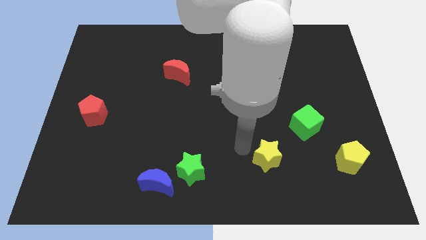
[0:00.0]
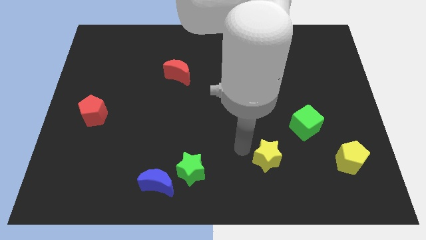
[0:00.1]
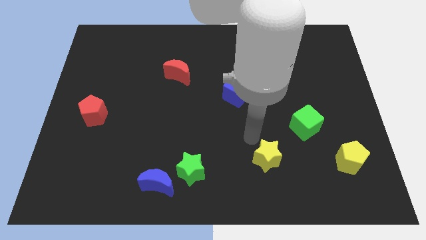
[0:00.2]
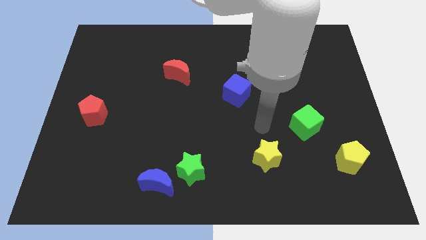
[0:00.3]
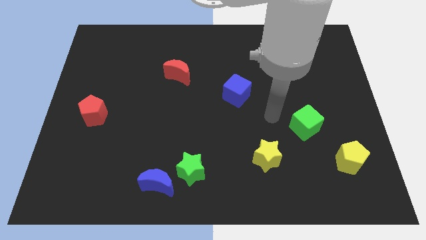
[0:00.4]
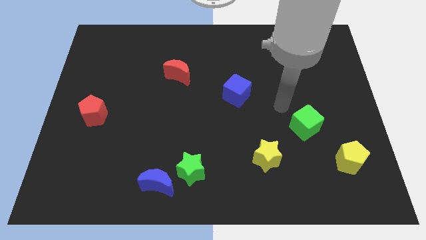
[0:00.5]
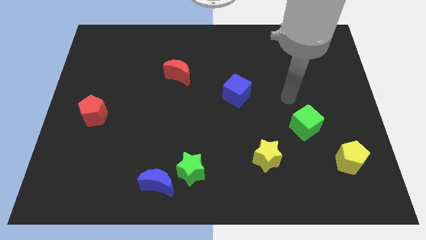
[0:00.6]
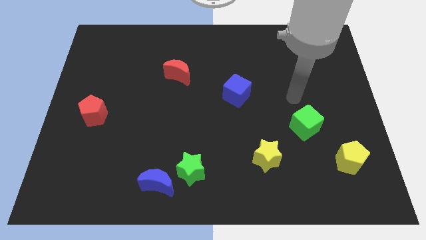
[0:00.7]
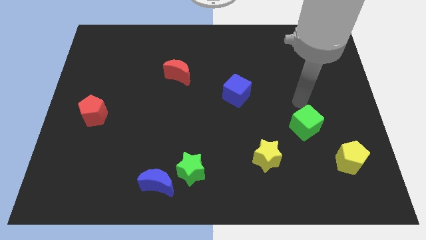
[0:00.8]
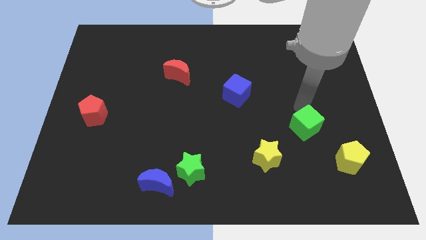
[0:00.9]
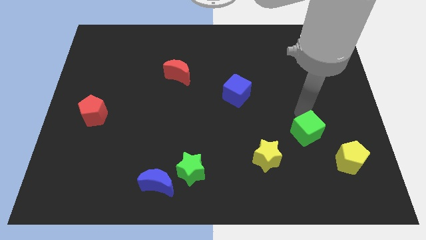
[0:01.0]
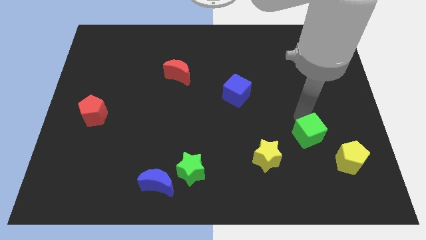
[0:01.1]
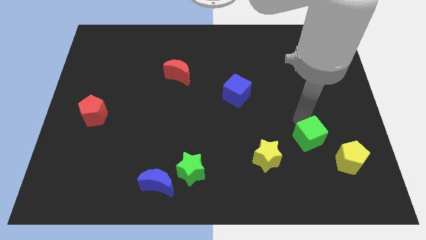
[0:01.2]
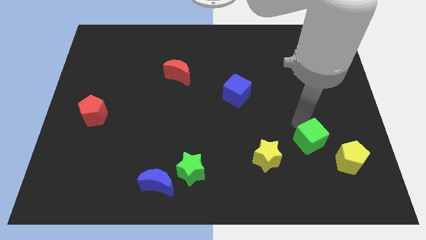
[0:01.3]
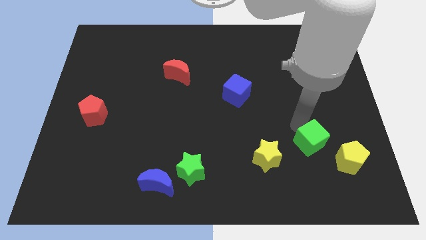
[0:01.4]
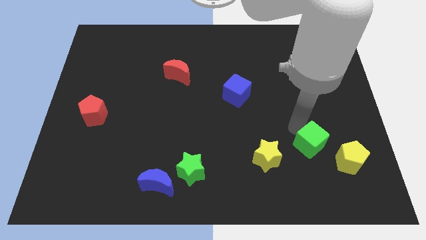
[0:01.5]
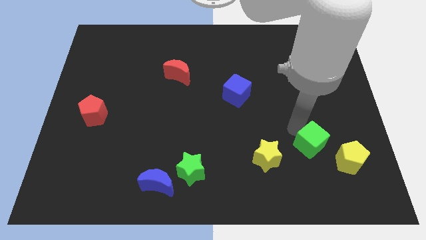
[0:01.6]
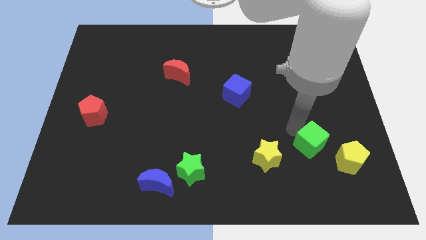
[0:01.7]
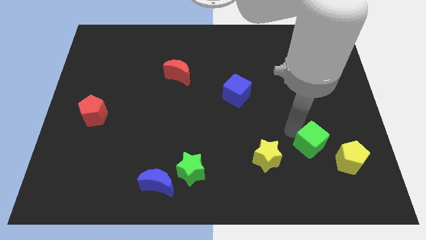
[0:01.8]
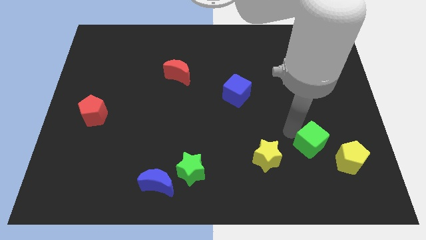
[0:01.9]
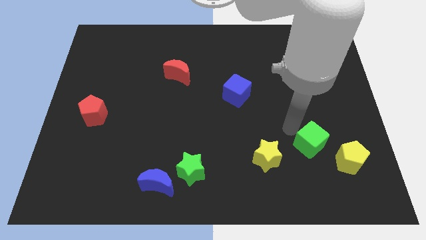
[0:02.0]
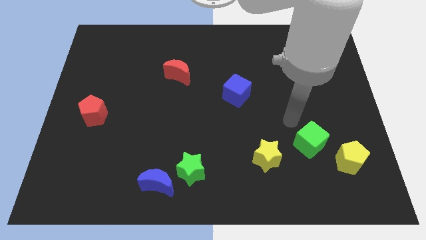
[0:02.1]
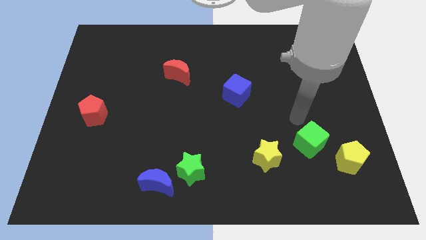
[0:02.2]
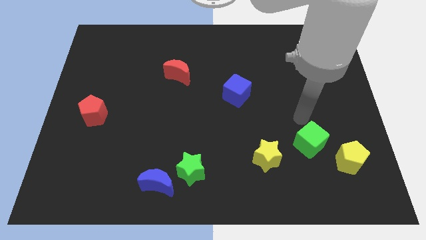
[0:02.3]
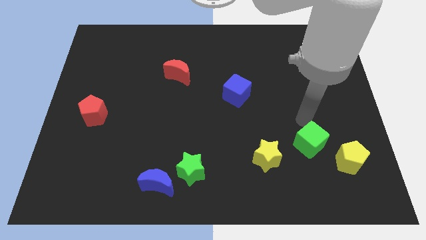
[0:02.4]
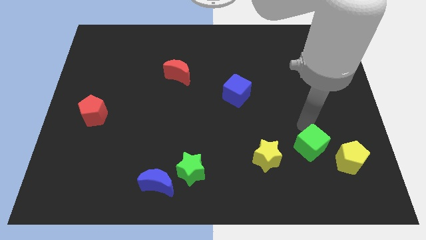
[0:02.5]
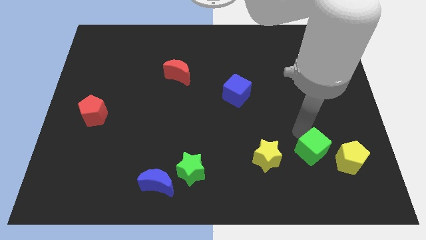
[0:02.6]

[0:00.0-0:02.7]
slide the green cube close to the yellow pentagon

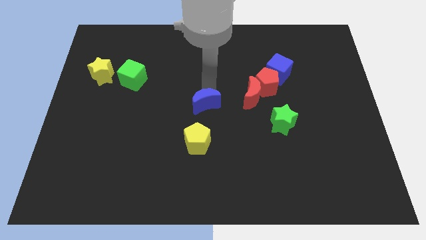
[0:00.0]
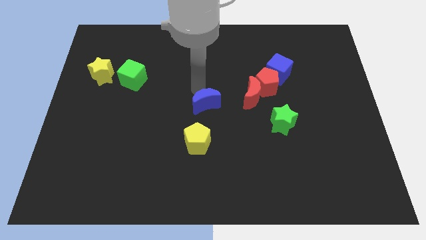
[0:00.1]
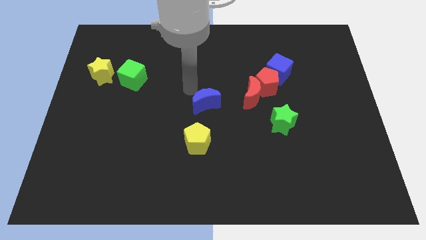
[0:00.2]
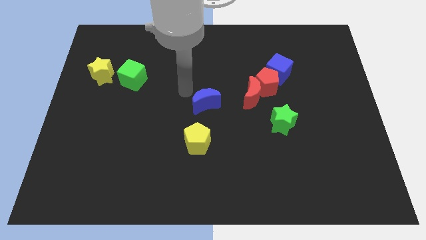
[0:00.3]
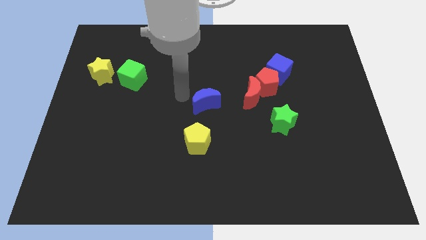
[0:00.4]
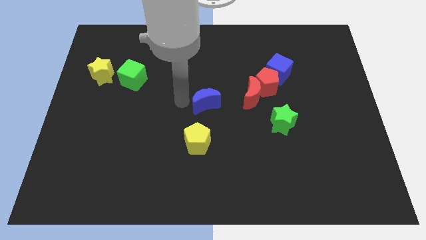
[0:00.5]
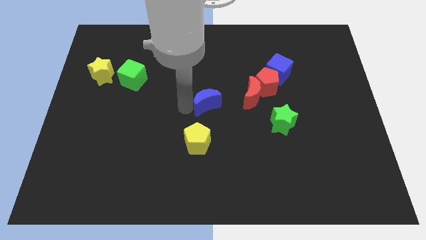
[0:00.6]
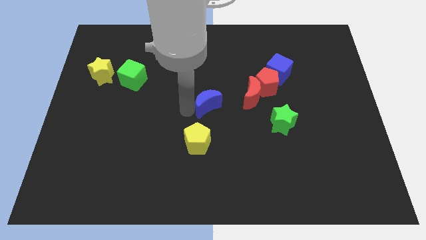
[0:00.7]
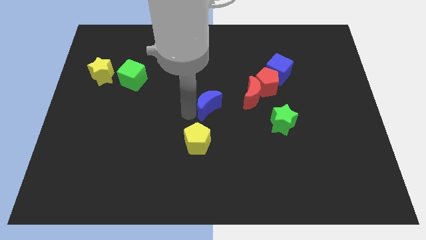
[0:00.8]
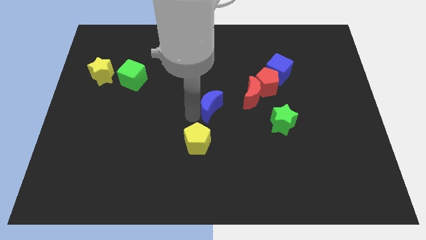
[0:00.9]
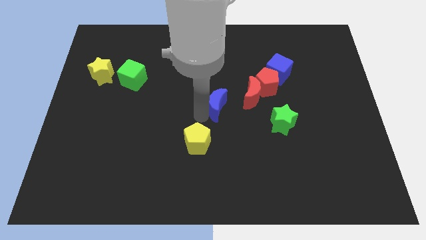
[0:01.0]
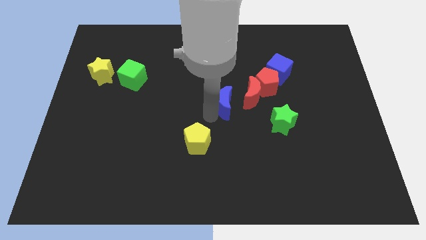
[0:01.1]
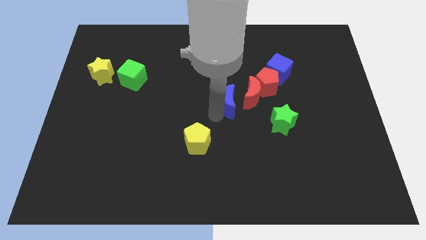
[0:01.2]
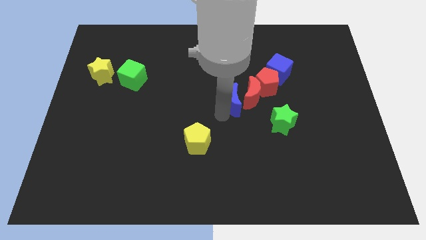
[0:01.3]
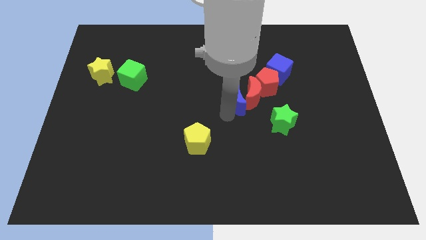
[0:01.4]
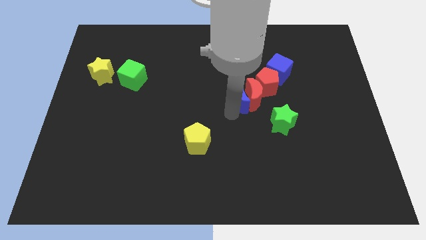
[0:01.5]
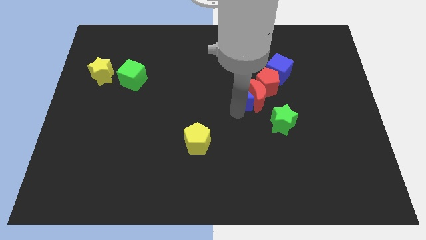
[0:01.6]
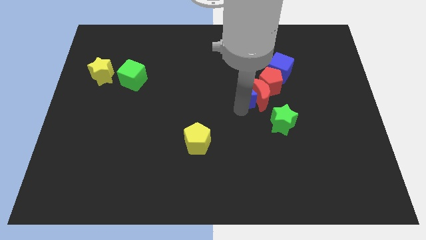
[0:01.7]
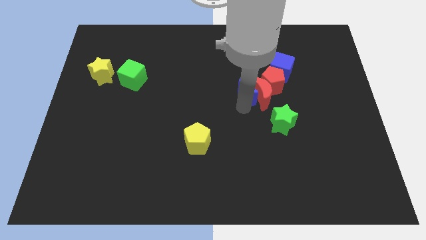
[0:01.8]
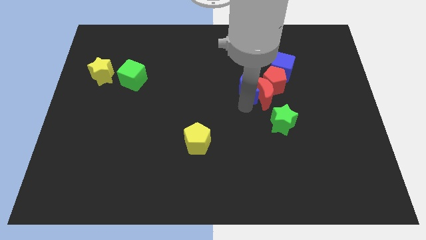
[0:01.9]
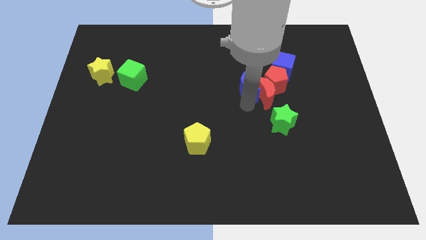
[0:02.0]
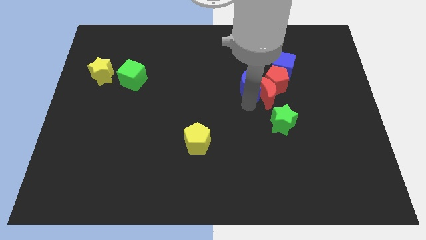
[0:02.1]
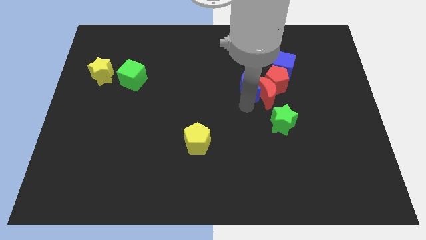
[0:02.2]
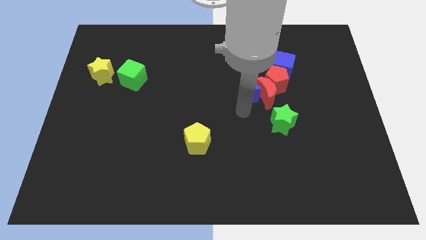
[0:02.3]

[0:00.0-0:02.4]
push the blue crescent into a group of blocks

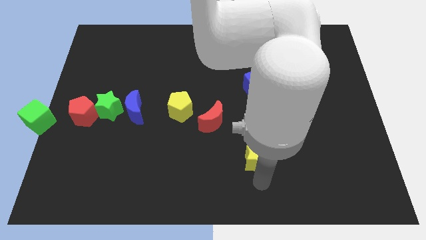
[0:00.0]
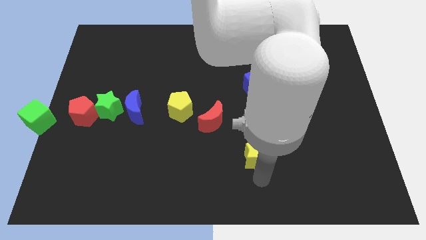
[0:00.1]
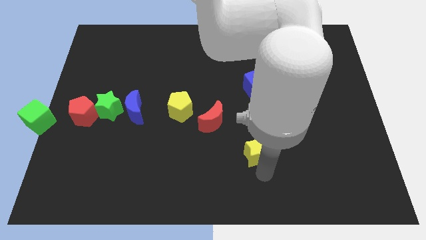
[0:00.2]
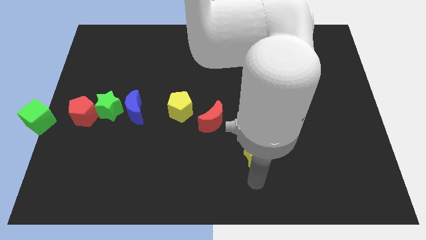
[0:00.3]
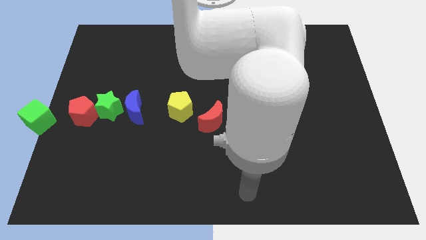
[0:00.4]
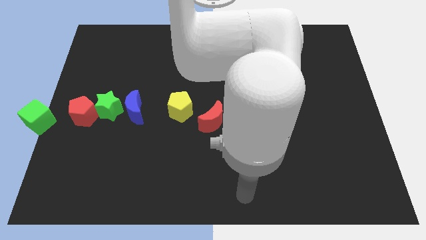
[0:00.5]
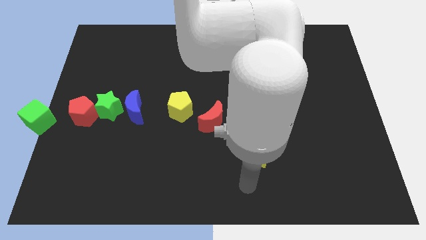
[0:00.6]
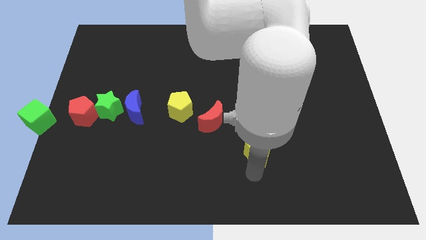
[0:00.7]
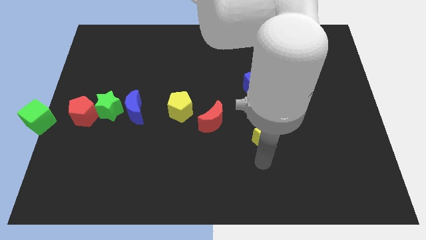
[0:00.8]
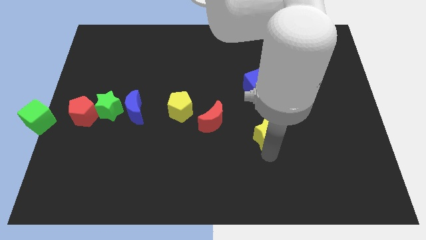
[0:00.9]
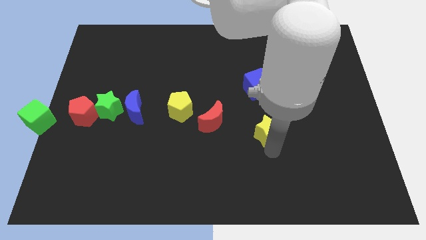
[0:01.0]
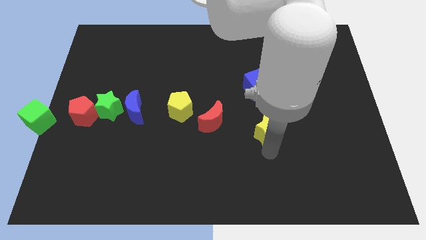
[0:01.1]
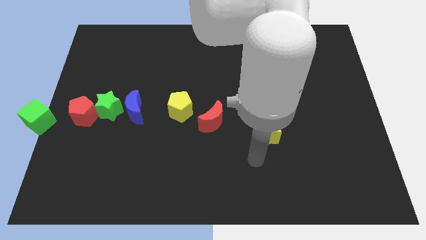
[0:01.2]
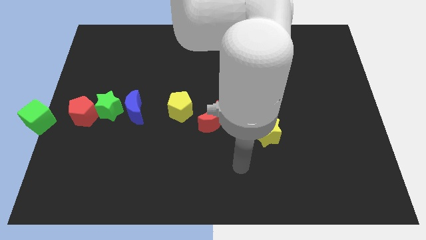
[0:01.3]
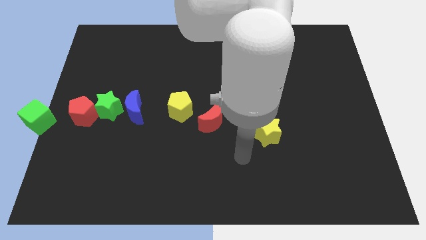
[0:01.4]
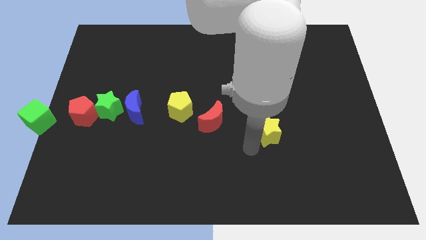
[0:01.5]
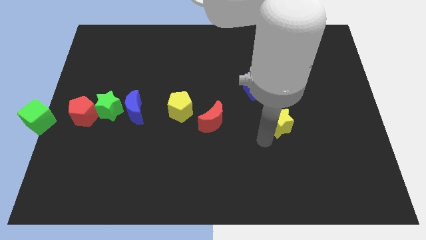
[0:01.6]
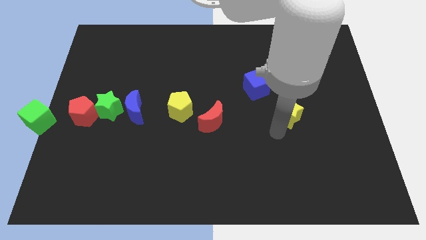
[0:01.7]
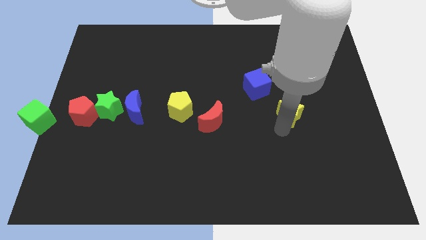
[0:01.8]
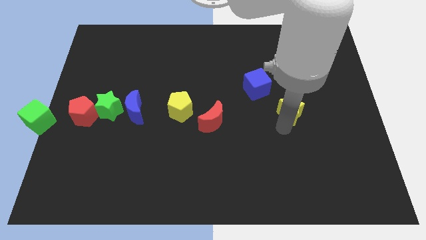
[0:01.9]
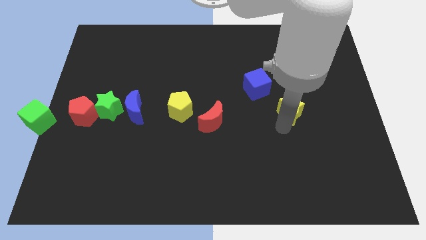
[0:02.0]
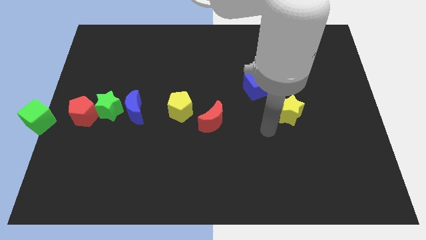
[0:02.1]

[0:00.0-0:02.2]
move the yellow star diagonally to the right of the red crescent

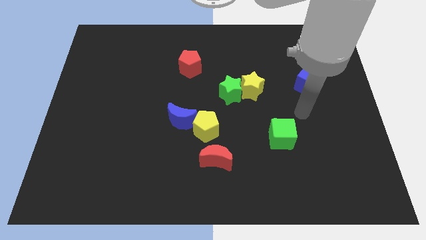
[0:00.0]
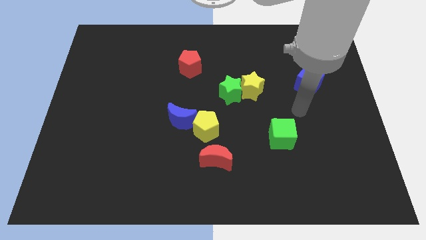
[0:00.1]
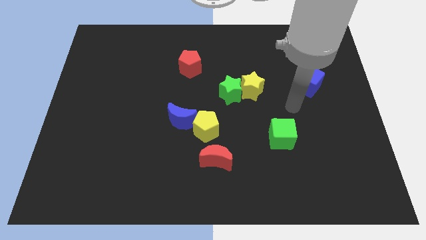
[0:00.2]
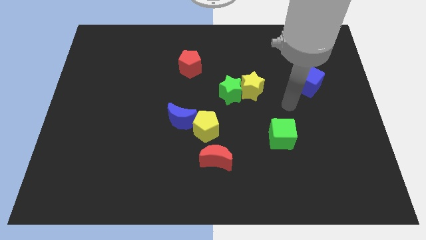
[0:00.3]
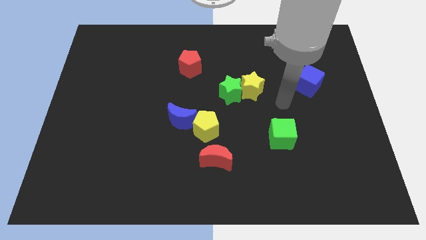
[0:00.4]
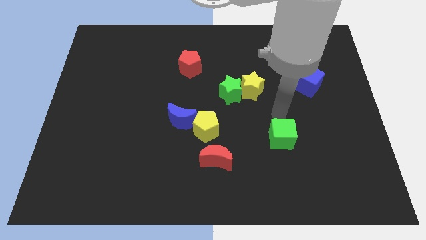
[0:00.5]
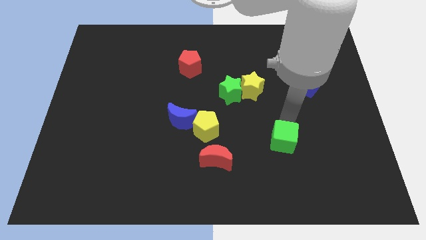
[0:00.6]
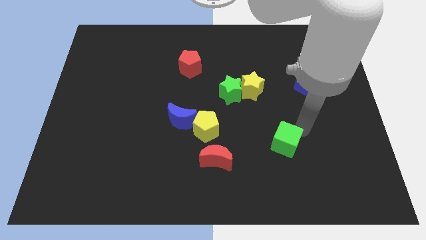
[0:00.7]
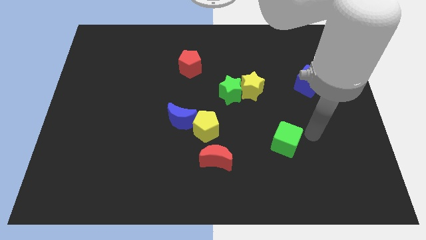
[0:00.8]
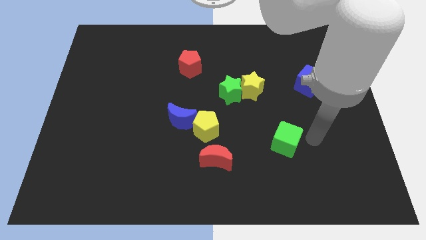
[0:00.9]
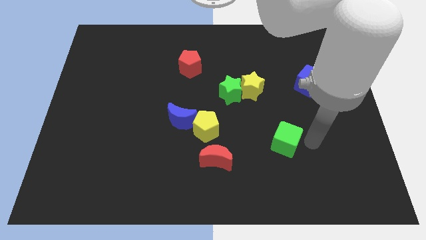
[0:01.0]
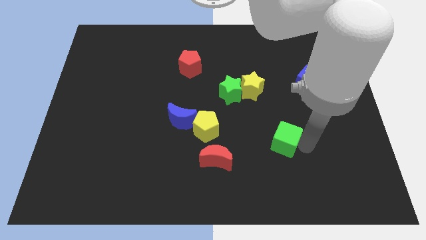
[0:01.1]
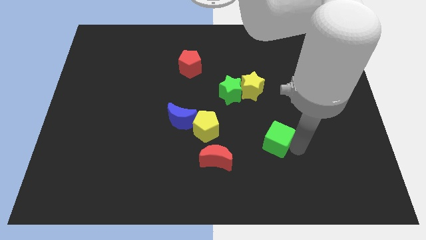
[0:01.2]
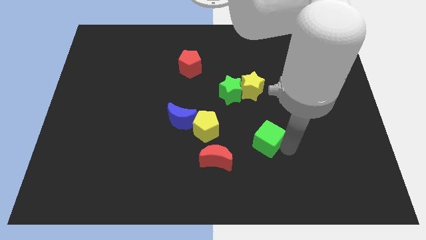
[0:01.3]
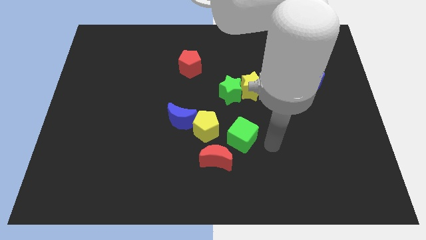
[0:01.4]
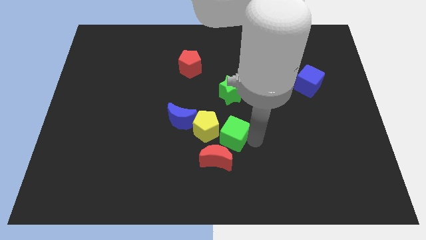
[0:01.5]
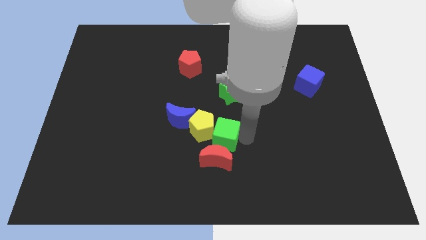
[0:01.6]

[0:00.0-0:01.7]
push the green cube towards the center of the board
